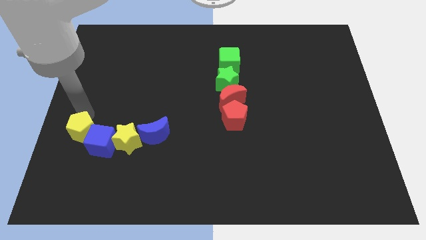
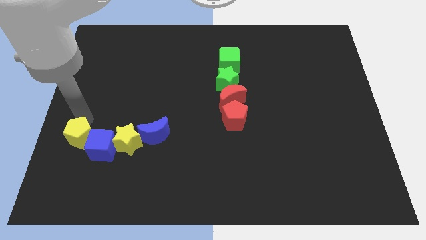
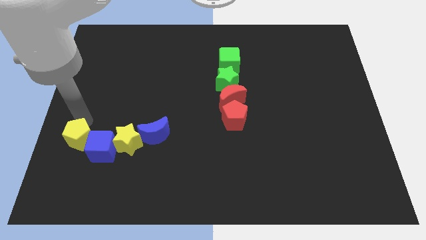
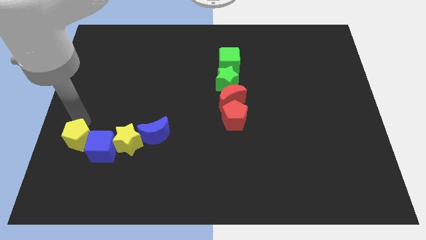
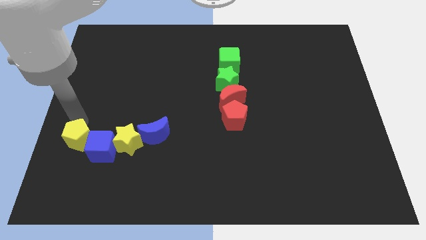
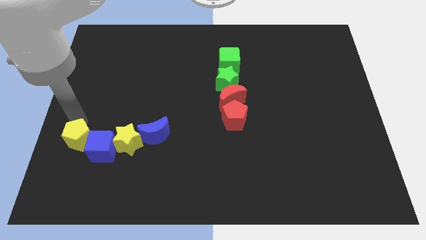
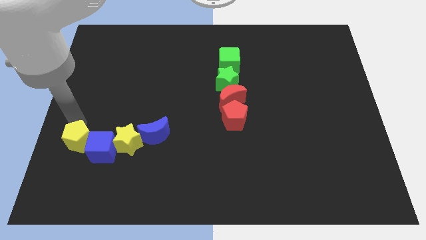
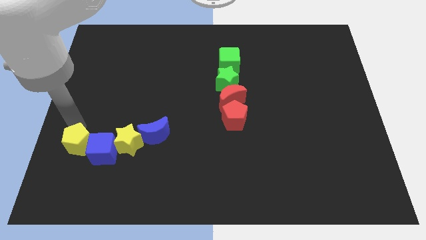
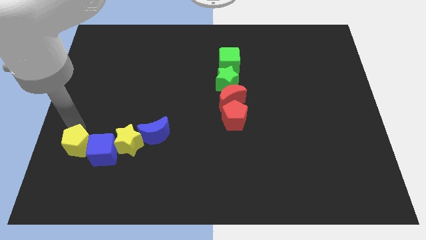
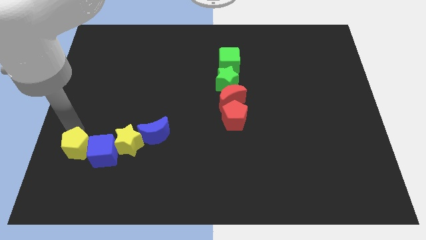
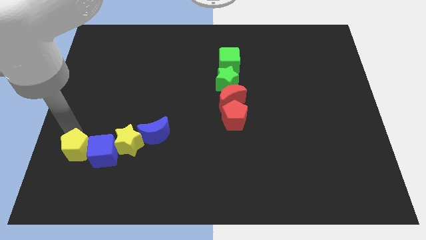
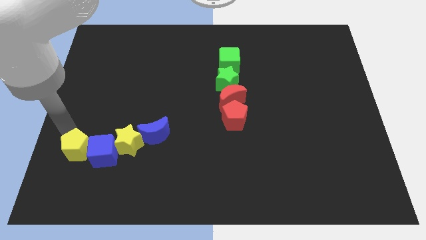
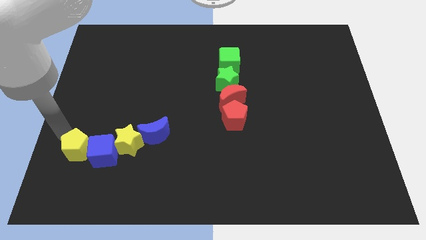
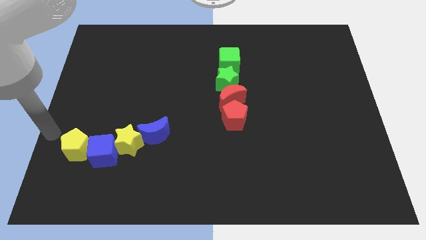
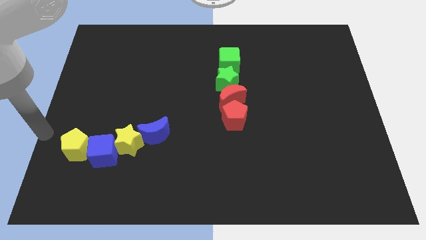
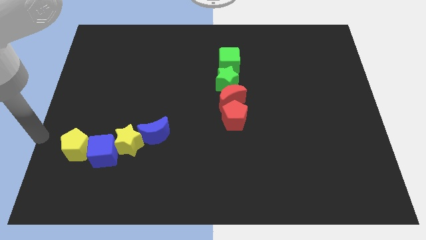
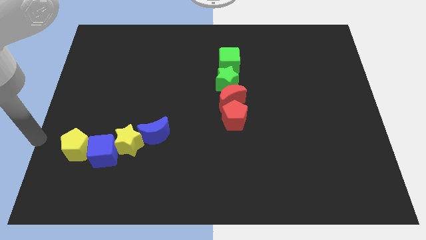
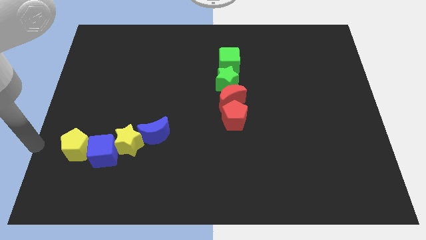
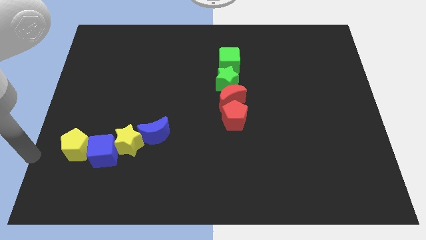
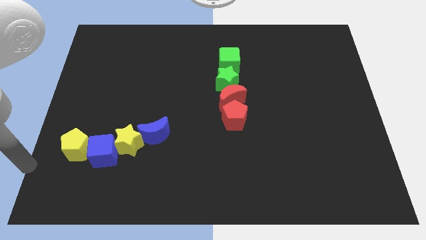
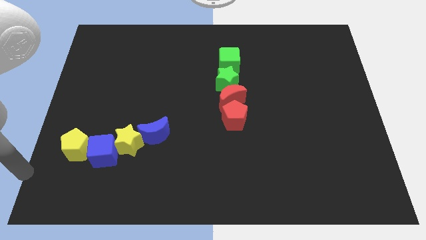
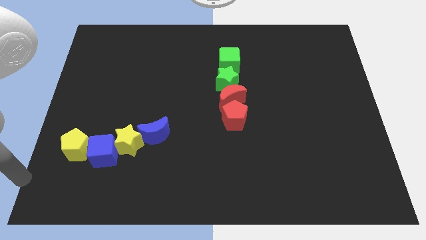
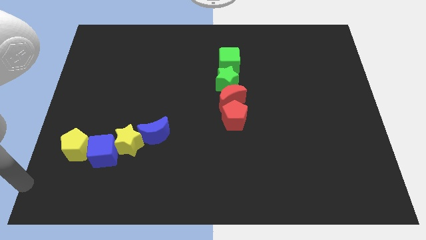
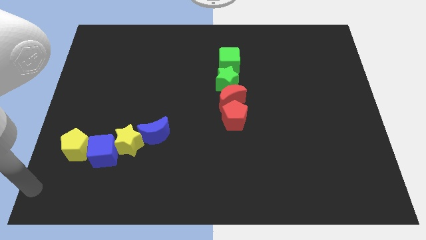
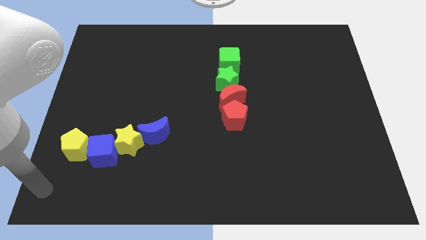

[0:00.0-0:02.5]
push the yellow pentagon slightly to the down

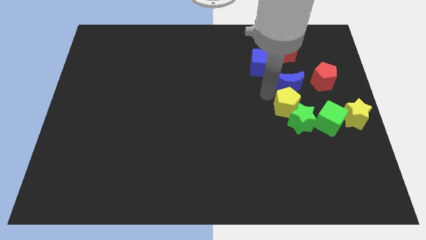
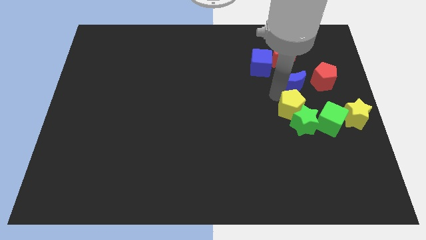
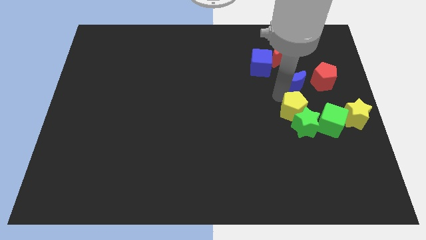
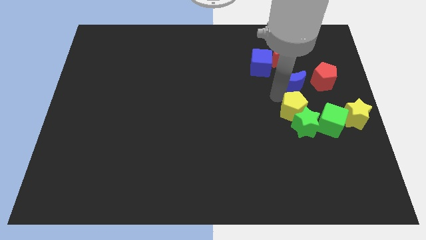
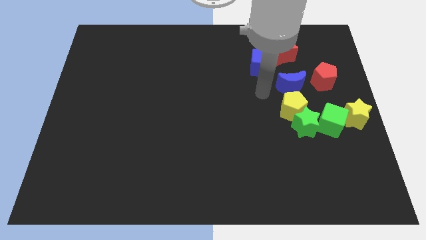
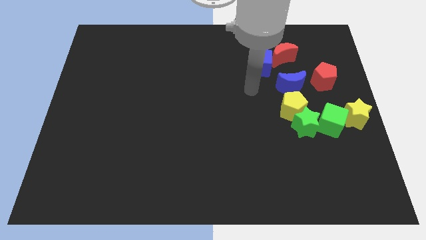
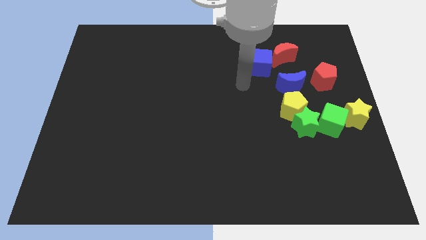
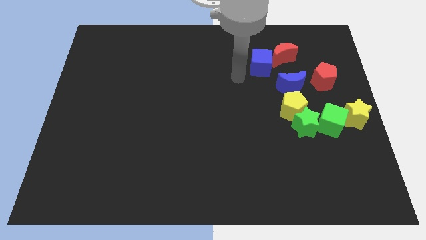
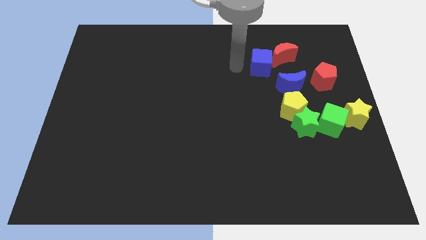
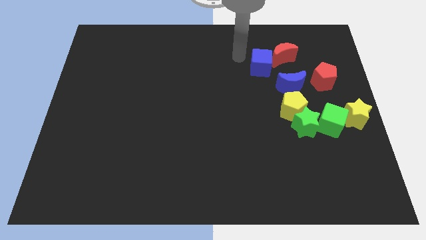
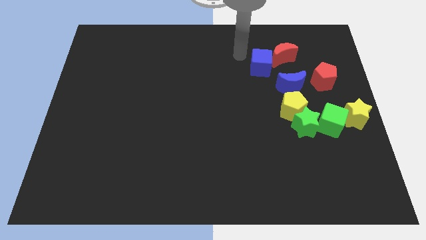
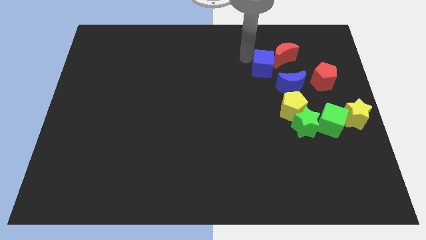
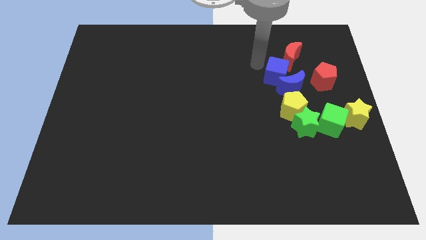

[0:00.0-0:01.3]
push the blue cube into the blue crescent

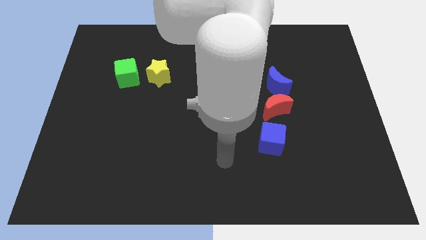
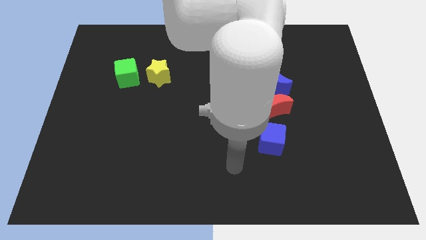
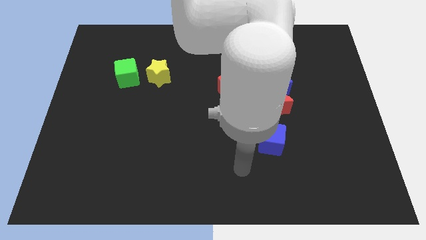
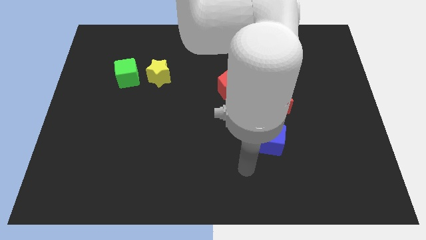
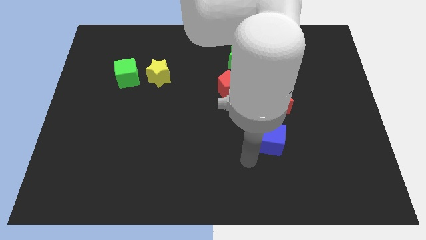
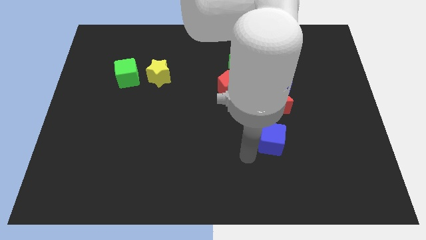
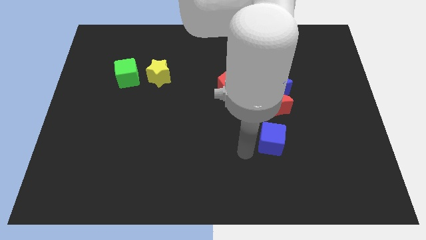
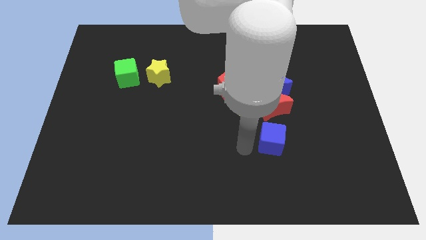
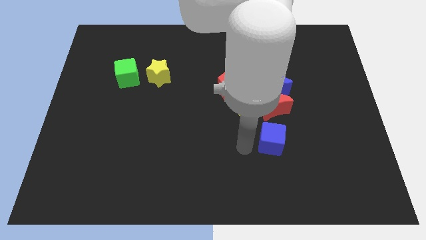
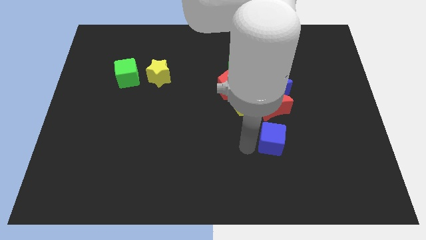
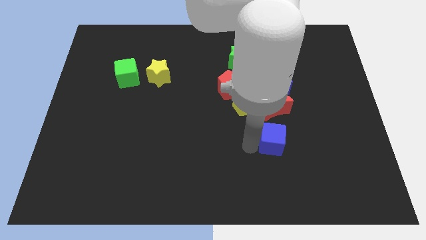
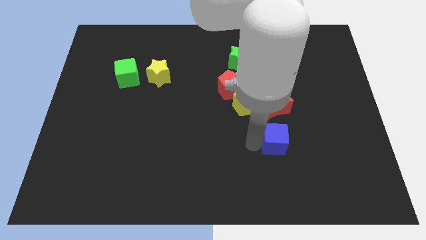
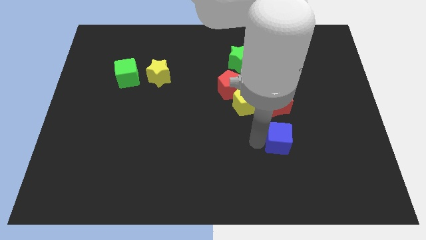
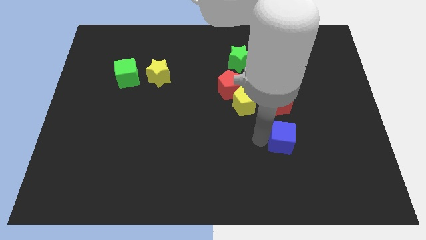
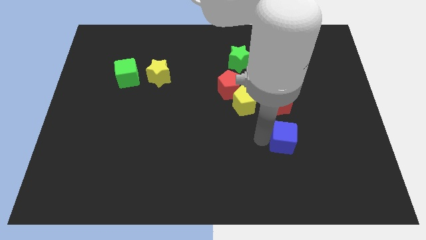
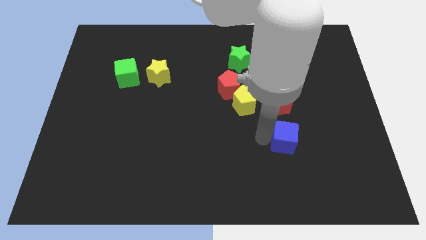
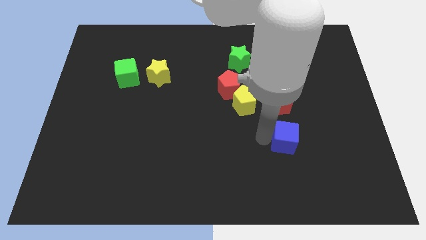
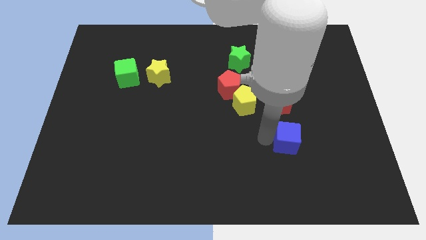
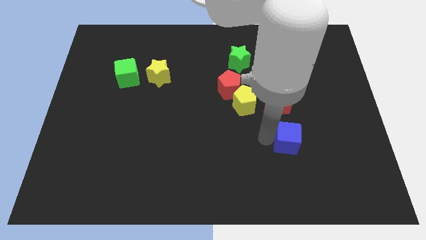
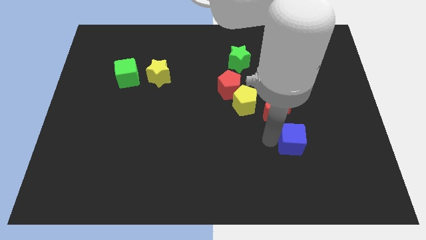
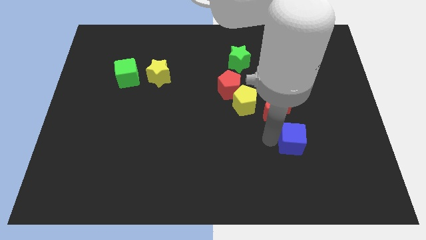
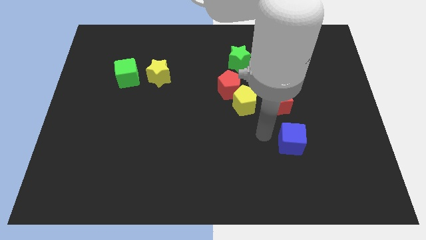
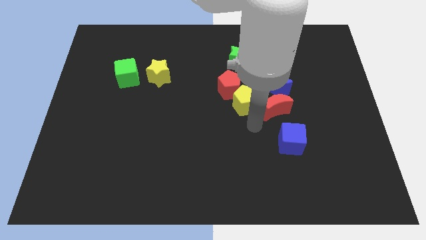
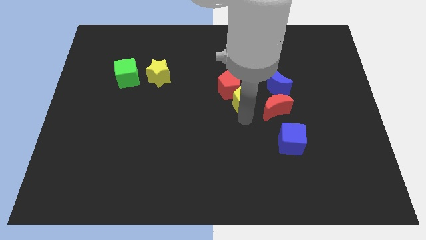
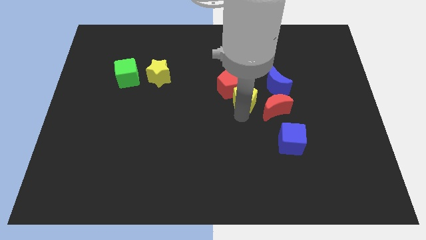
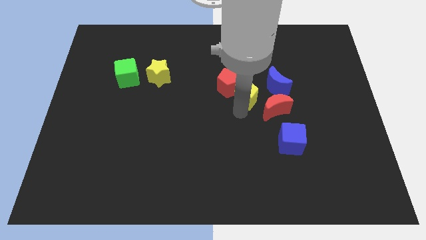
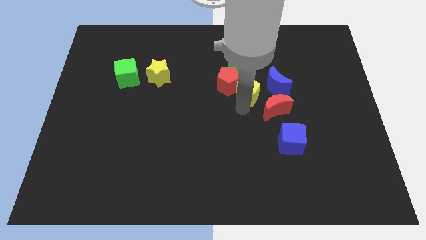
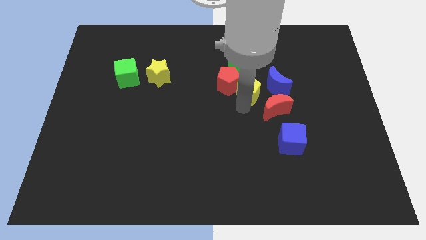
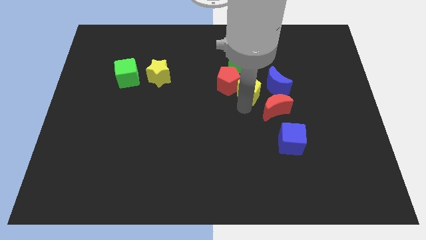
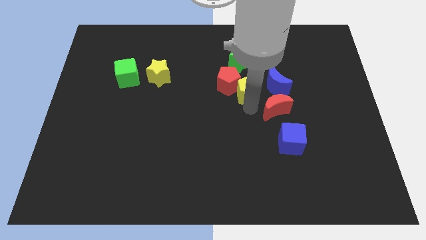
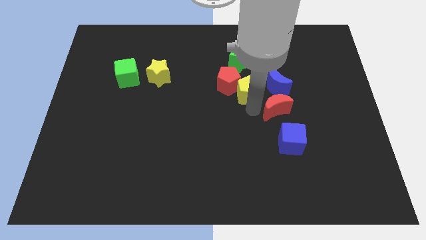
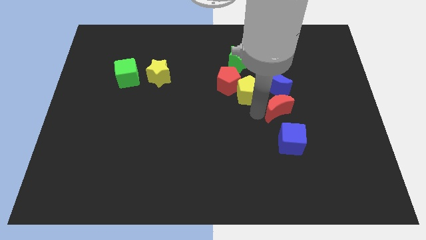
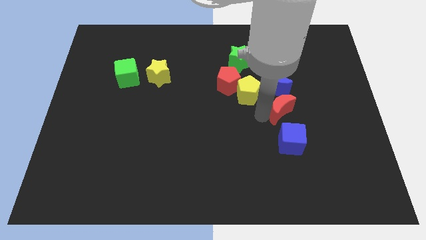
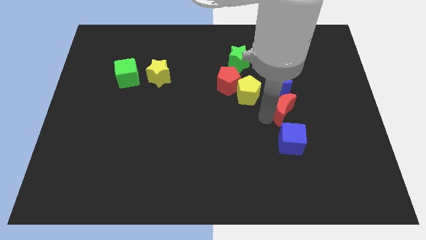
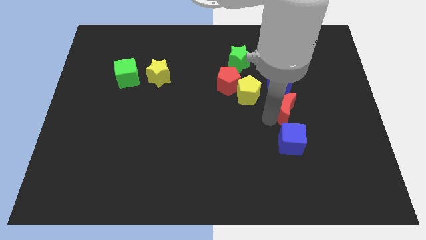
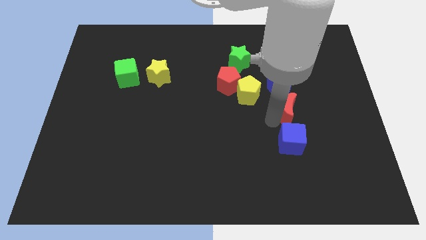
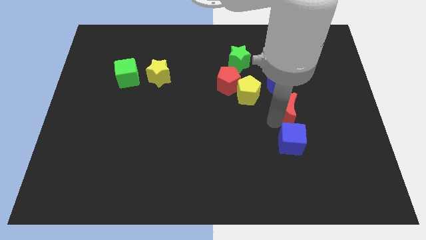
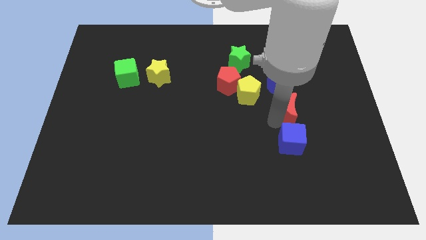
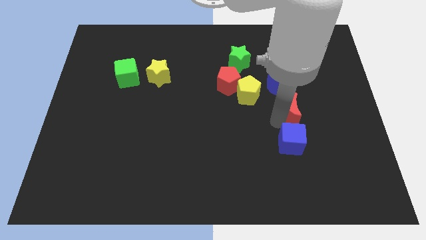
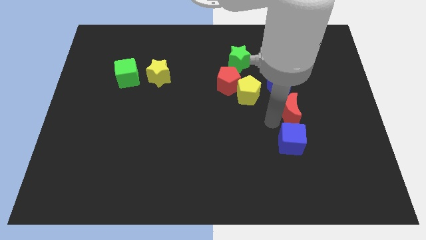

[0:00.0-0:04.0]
place the red moon above the blue cube

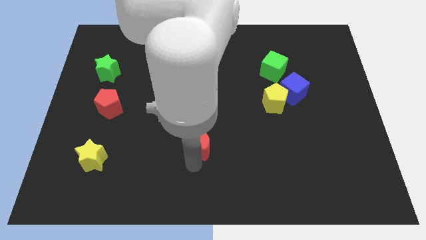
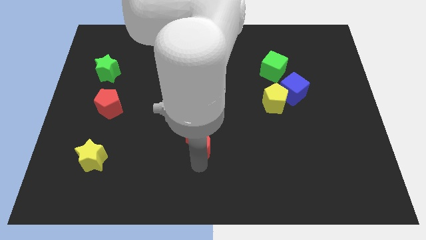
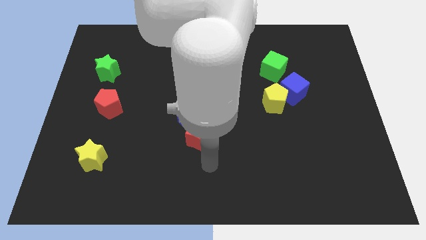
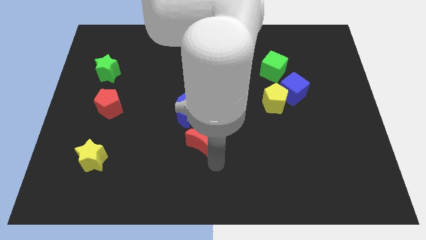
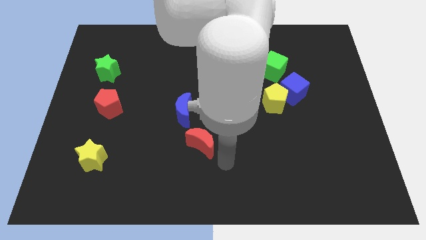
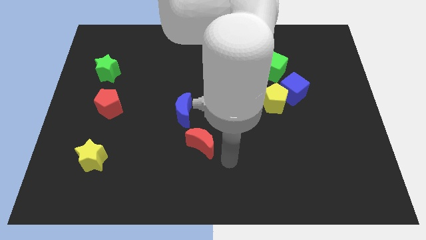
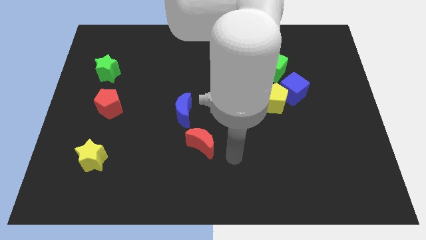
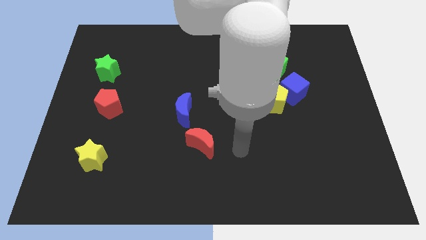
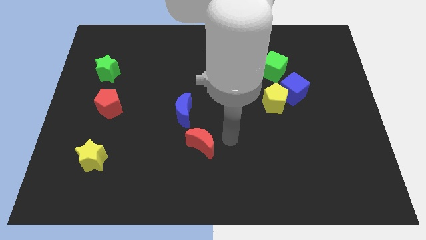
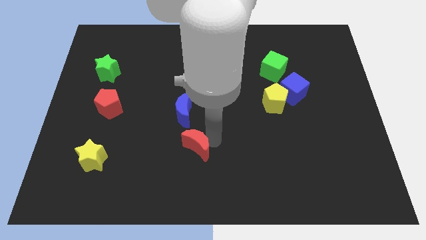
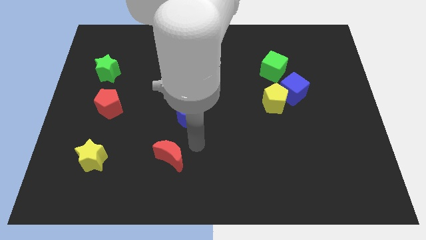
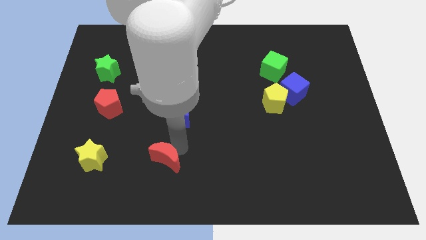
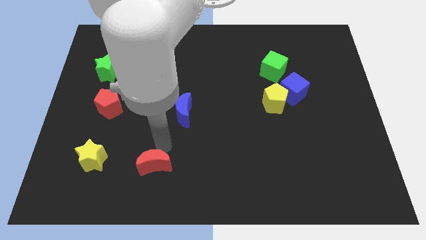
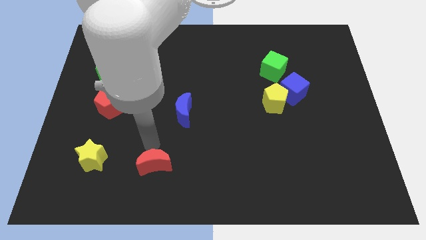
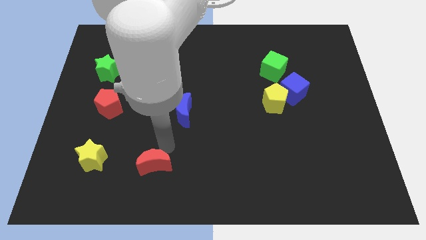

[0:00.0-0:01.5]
slide the red moon to the right of yellow star
